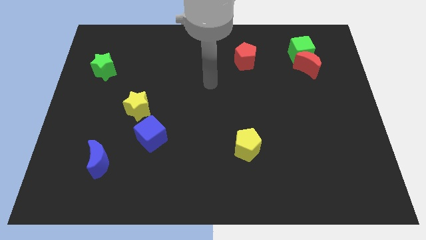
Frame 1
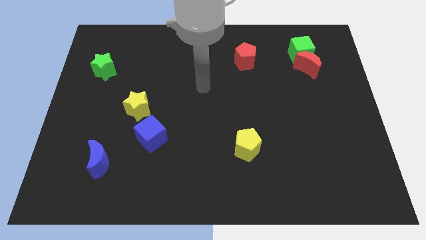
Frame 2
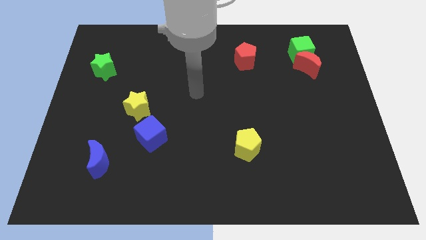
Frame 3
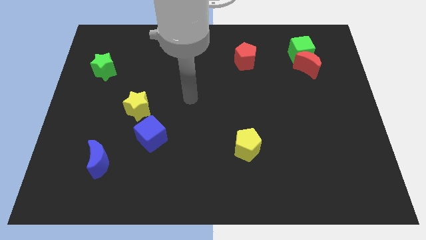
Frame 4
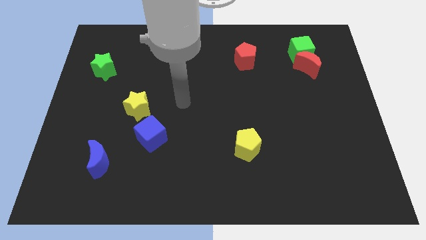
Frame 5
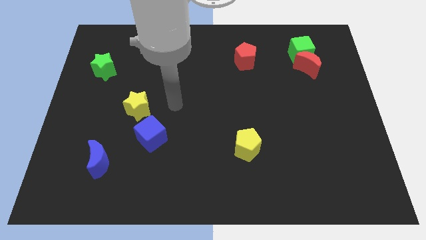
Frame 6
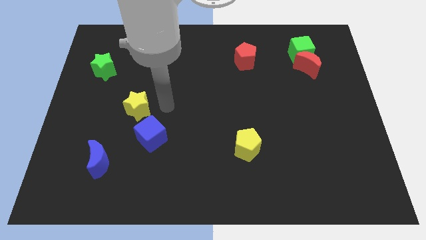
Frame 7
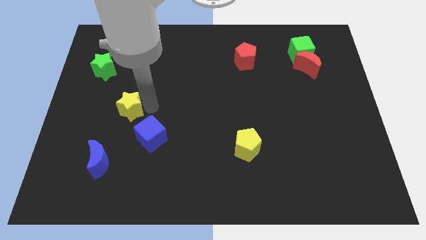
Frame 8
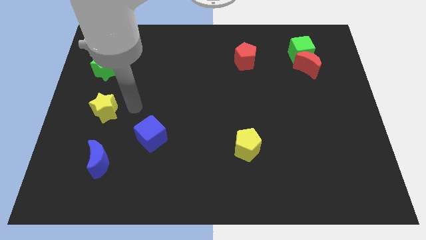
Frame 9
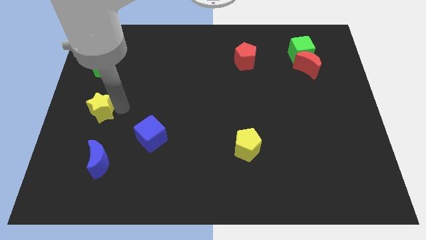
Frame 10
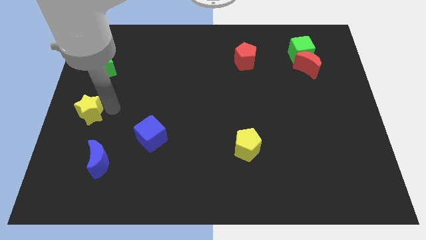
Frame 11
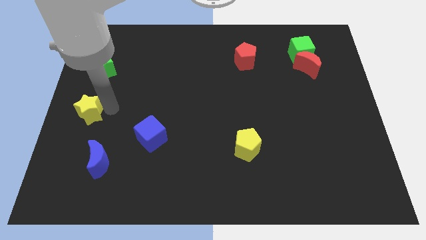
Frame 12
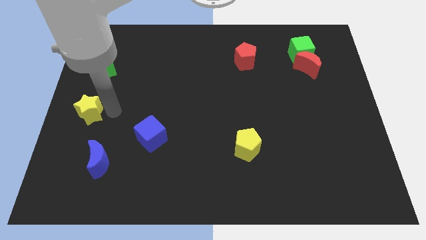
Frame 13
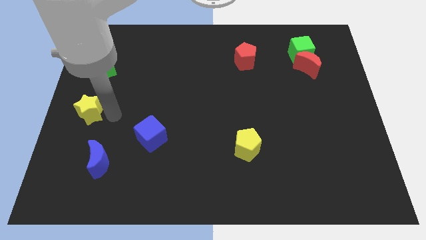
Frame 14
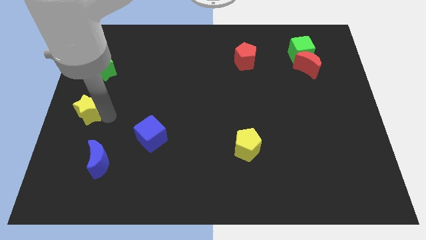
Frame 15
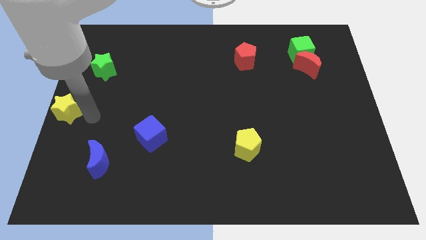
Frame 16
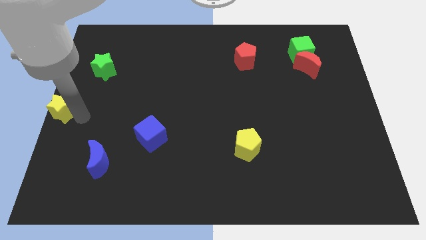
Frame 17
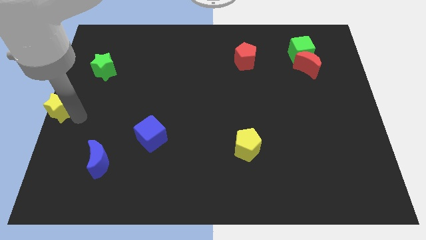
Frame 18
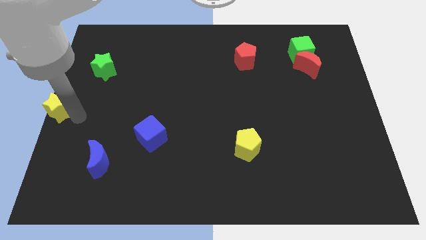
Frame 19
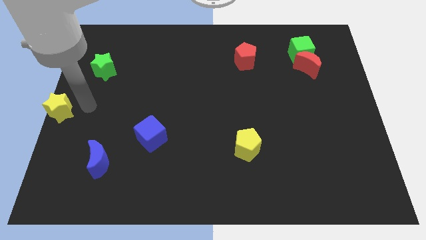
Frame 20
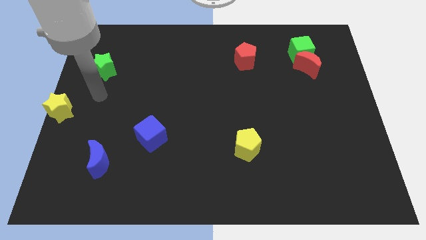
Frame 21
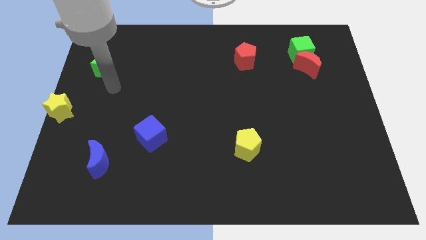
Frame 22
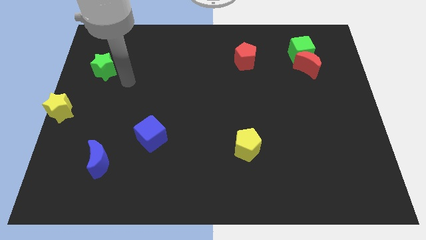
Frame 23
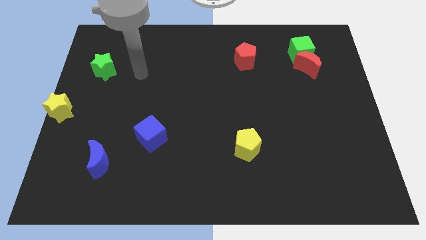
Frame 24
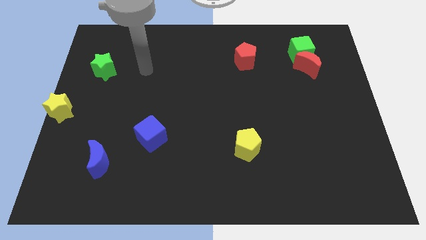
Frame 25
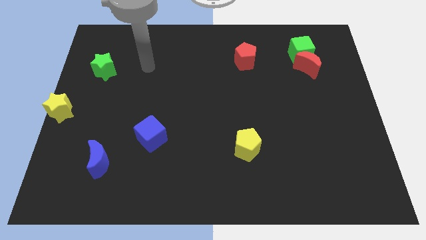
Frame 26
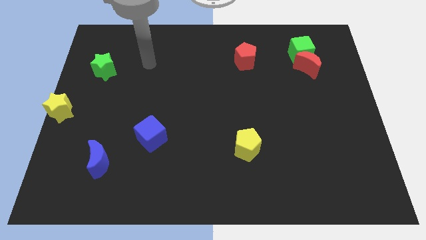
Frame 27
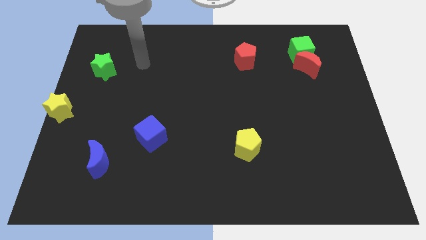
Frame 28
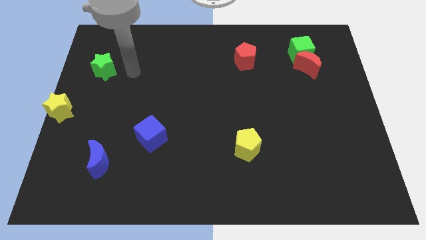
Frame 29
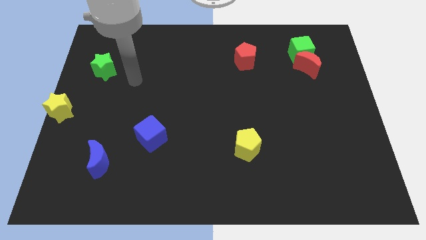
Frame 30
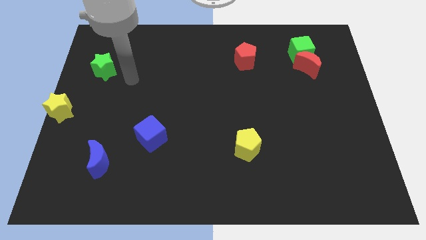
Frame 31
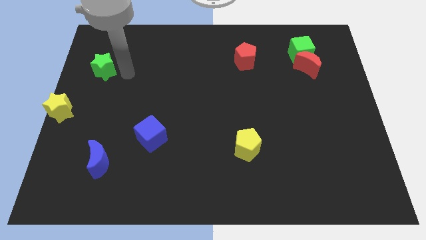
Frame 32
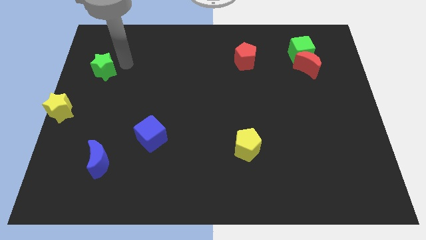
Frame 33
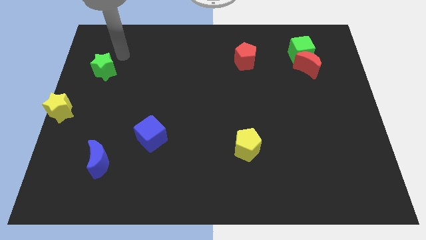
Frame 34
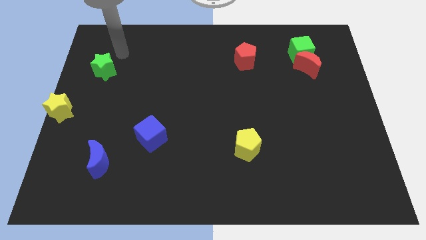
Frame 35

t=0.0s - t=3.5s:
move the yellow star left top diagonal to the blue moon

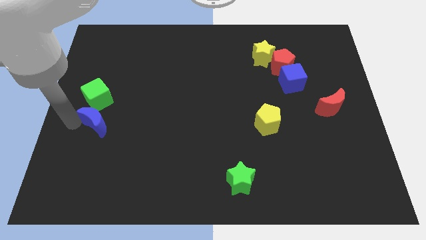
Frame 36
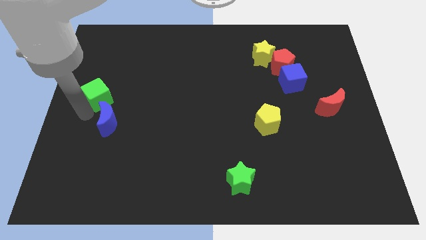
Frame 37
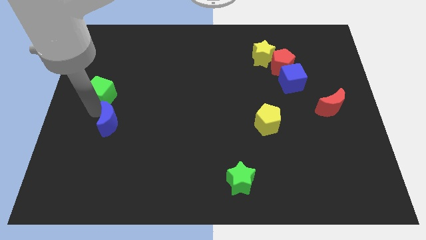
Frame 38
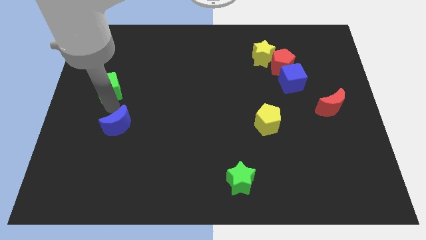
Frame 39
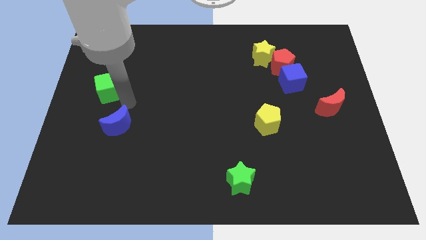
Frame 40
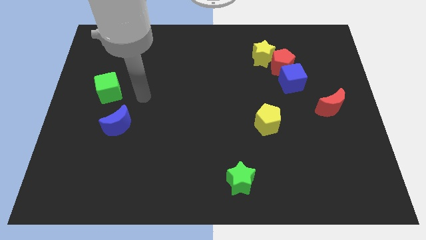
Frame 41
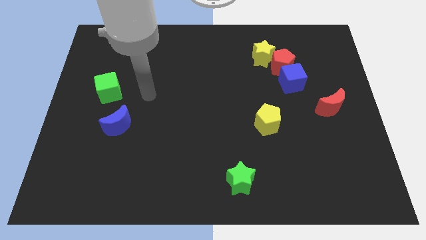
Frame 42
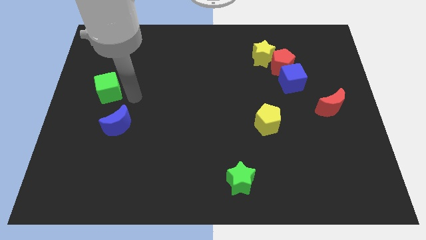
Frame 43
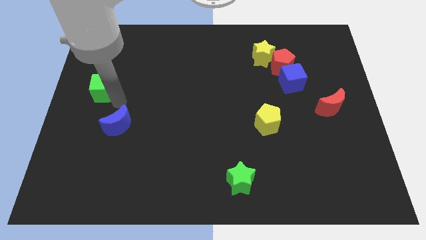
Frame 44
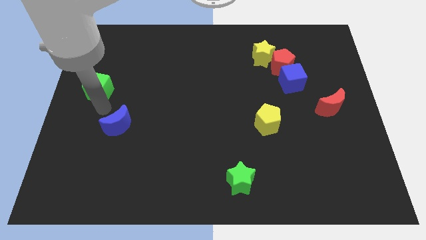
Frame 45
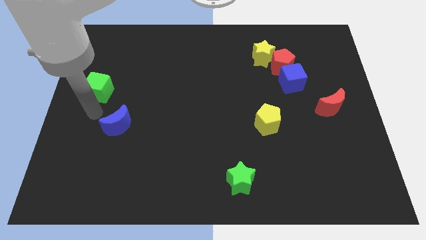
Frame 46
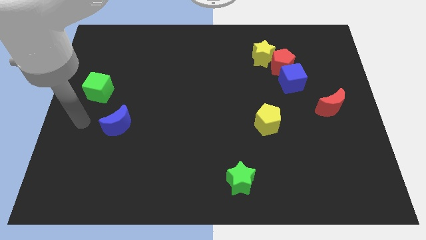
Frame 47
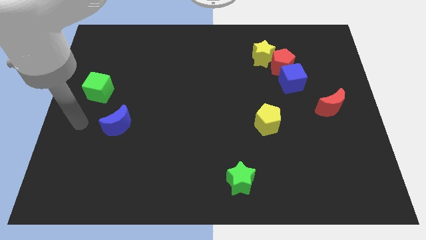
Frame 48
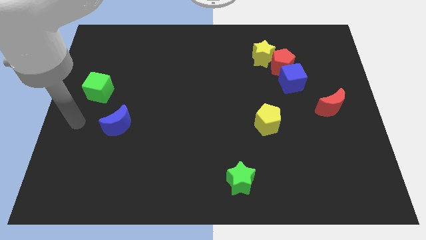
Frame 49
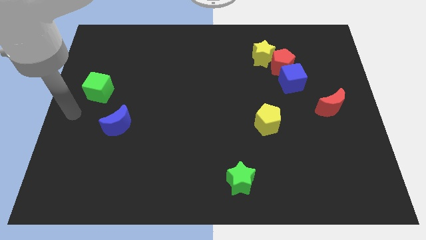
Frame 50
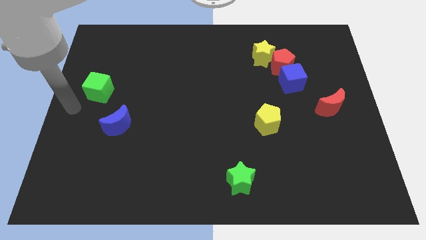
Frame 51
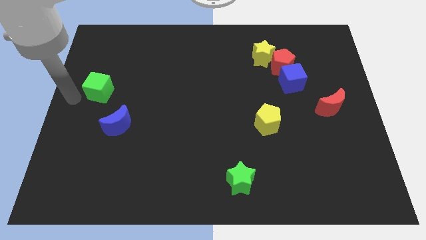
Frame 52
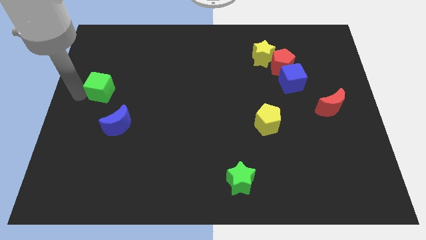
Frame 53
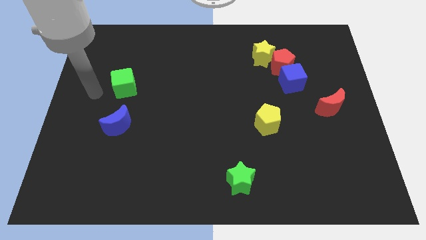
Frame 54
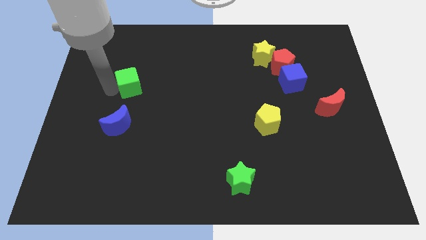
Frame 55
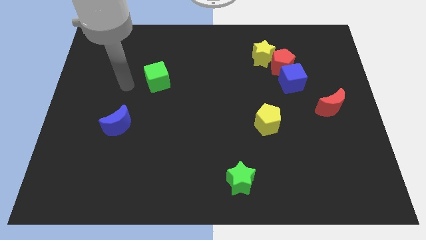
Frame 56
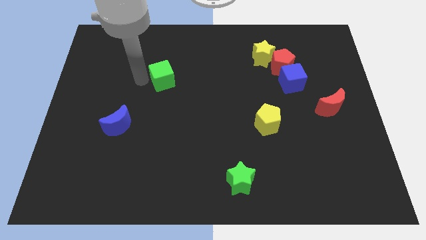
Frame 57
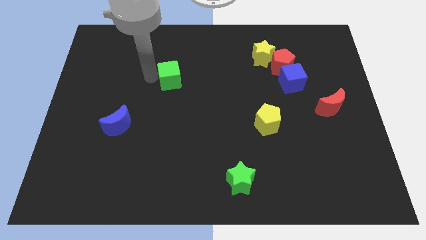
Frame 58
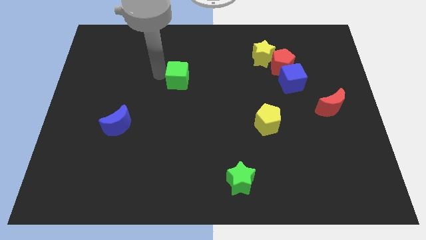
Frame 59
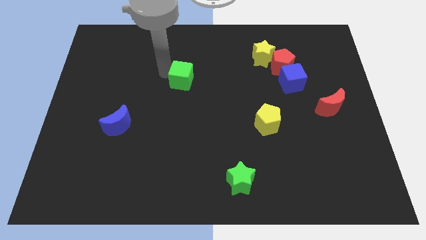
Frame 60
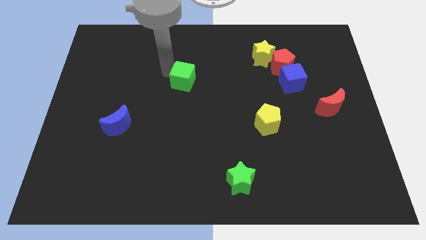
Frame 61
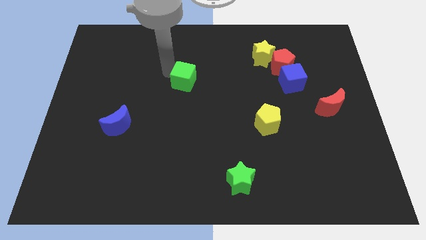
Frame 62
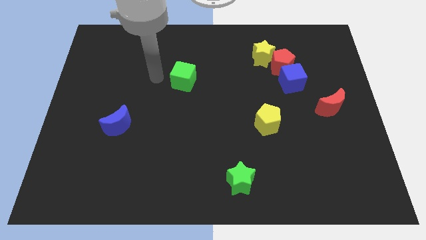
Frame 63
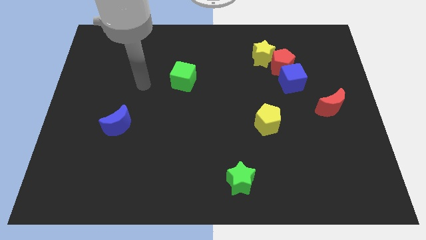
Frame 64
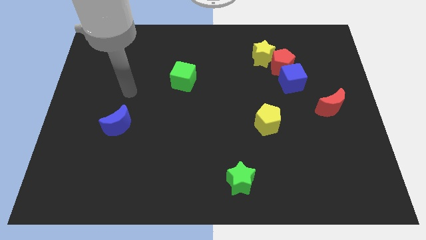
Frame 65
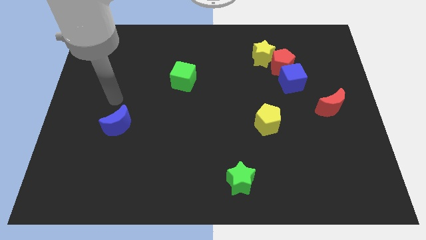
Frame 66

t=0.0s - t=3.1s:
separate green cube from blue moon

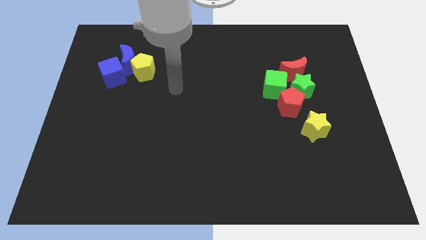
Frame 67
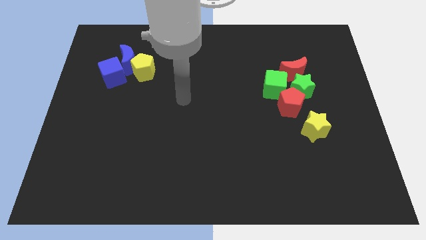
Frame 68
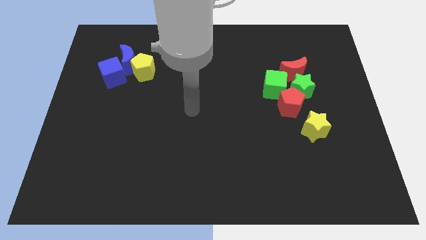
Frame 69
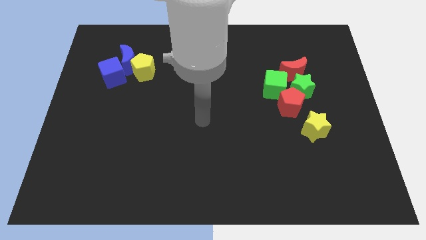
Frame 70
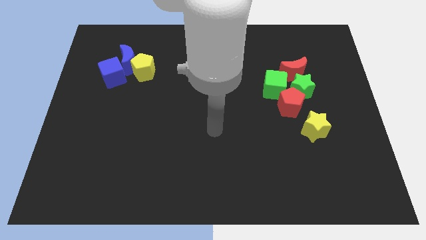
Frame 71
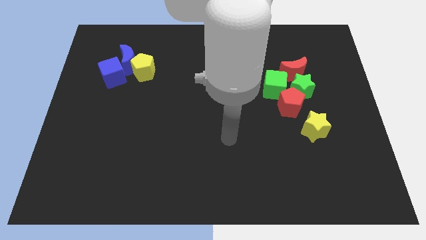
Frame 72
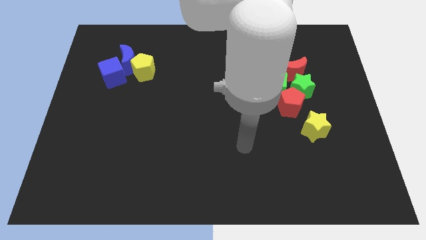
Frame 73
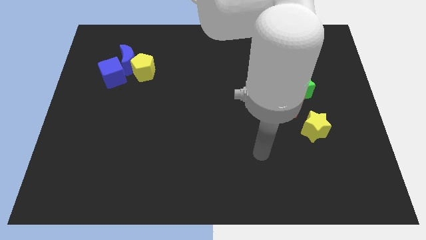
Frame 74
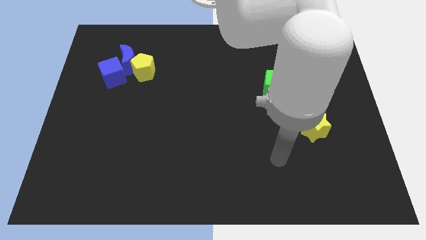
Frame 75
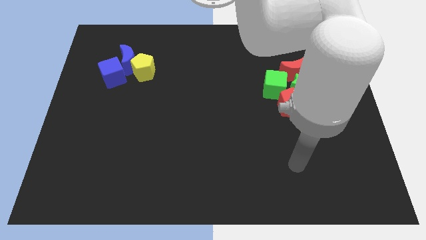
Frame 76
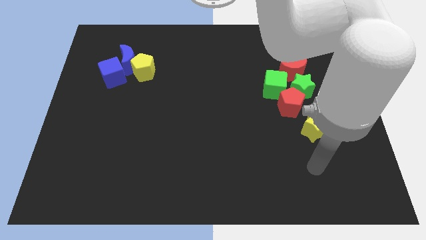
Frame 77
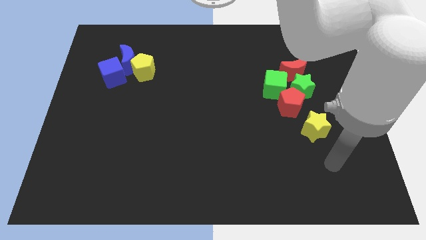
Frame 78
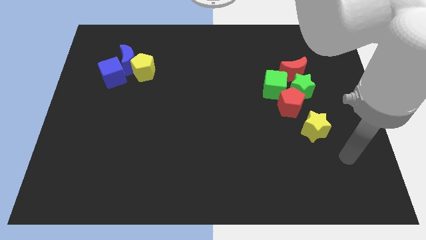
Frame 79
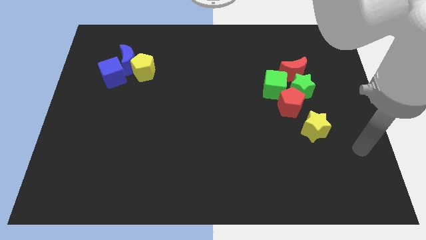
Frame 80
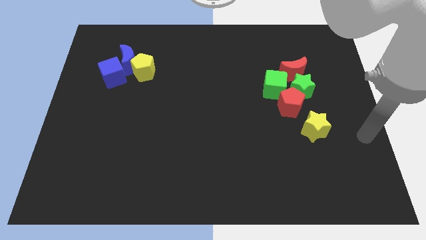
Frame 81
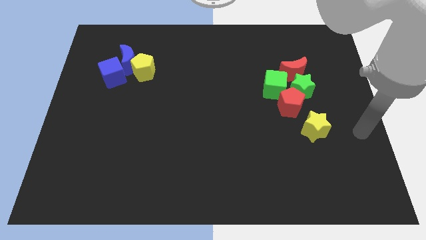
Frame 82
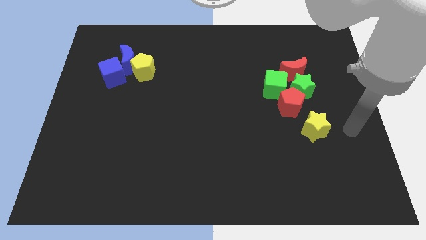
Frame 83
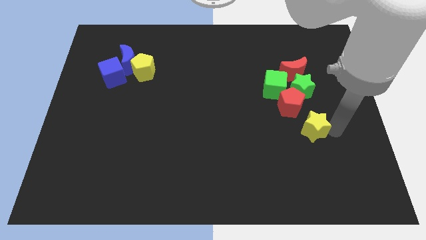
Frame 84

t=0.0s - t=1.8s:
point your arm at the right side of the yellow star

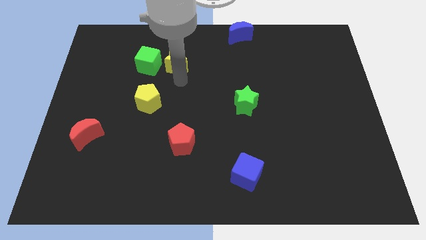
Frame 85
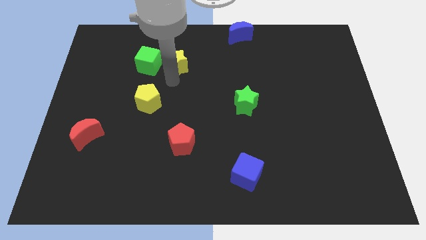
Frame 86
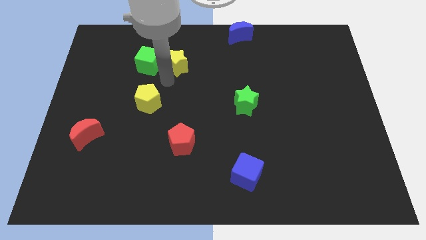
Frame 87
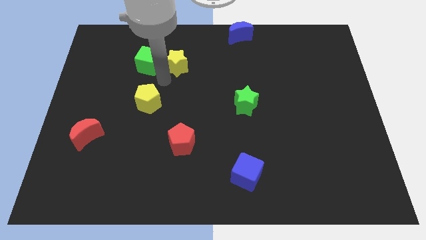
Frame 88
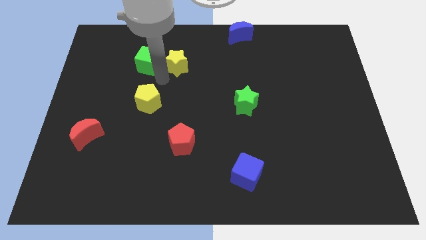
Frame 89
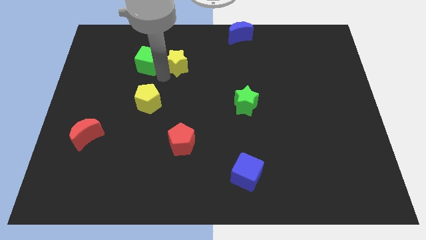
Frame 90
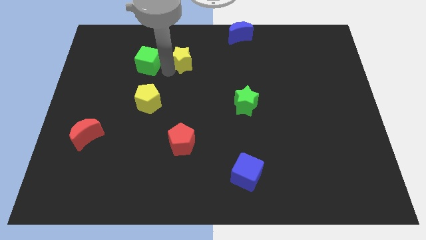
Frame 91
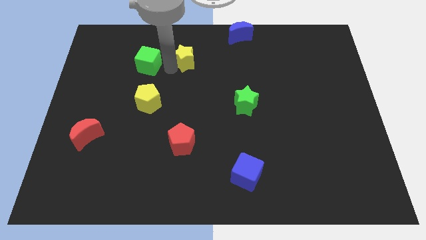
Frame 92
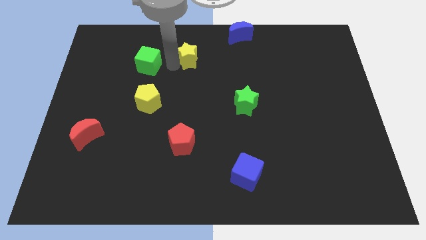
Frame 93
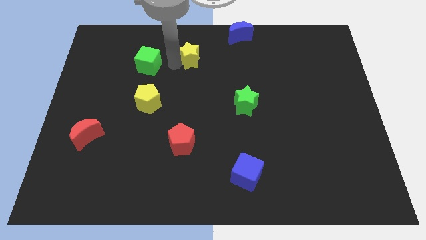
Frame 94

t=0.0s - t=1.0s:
point your arm between yellow star and green cube
